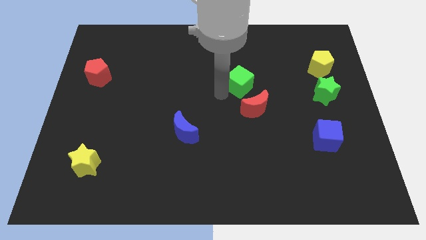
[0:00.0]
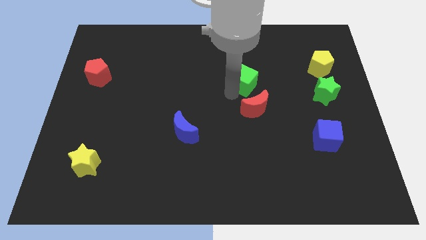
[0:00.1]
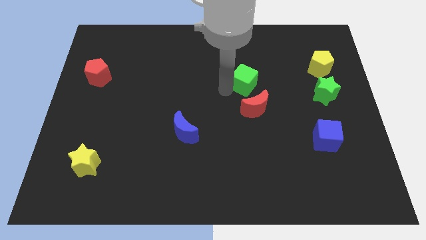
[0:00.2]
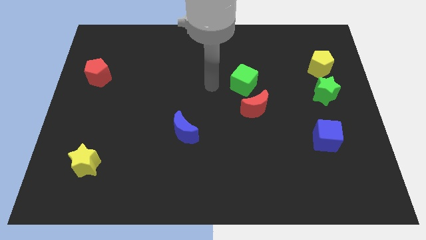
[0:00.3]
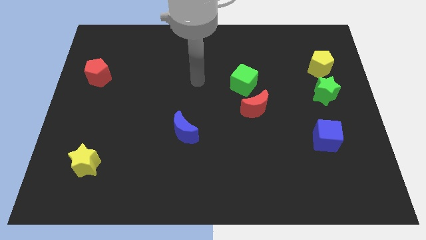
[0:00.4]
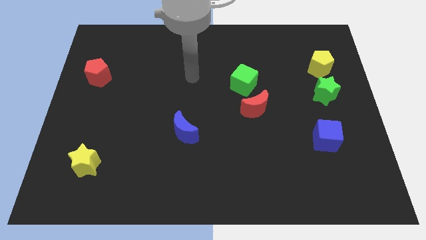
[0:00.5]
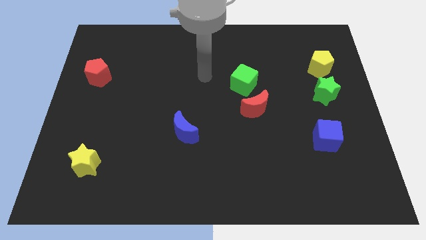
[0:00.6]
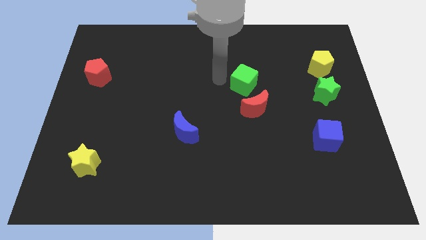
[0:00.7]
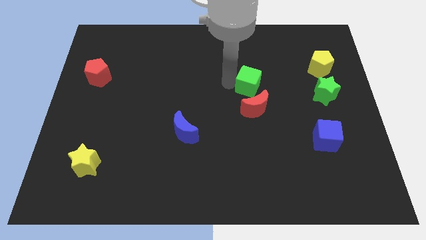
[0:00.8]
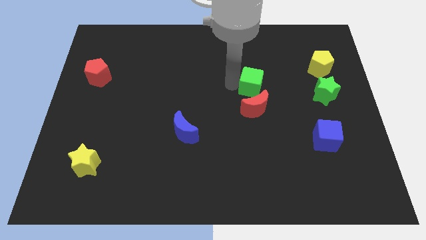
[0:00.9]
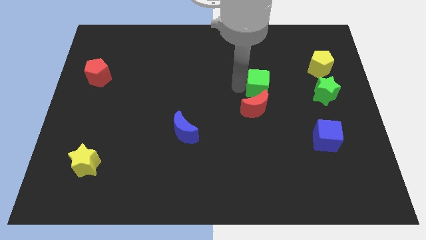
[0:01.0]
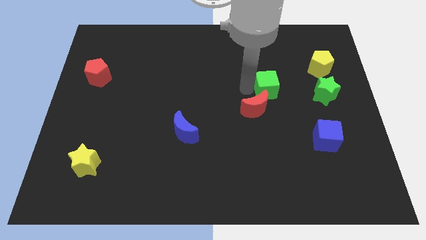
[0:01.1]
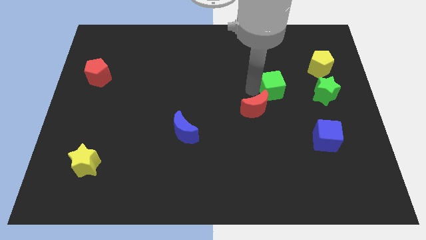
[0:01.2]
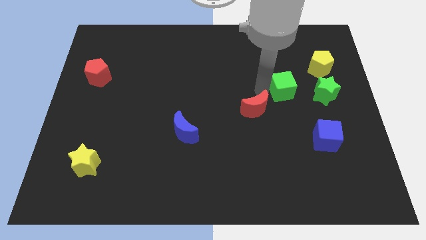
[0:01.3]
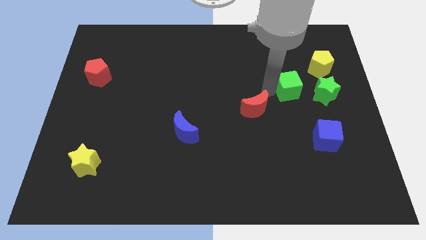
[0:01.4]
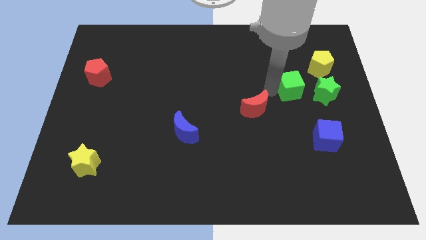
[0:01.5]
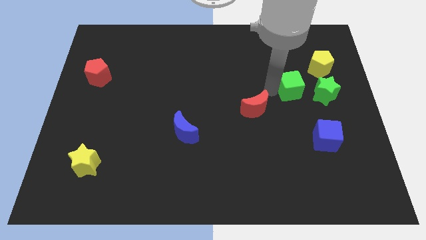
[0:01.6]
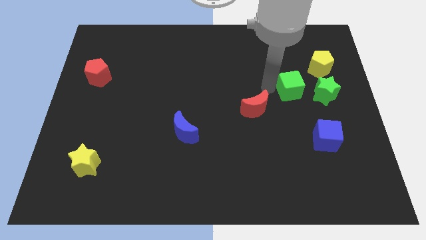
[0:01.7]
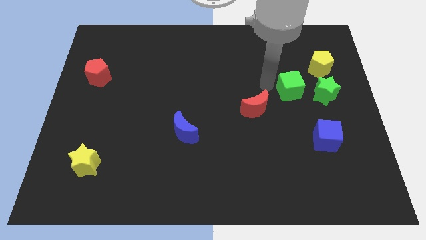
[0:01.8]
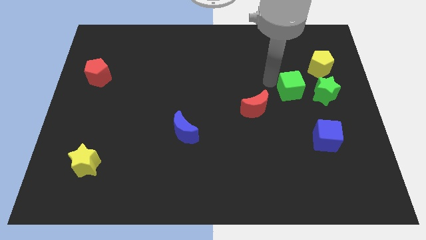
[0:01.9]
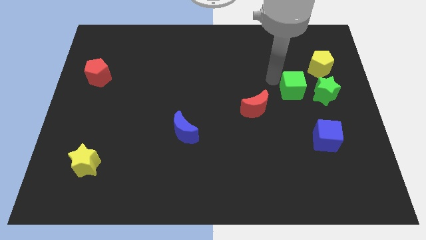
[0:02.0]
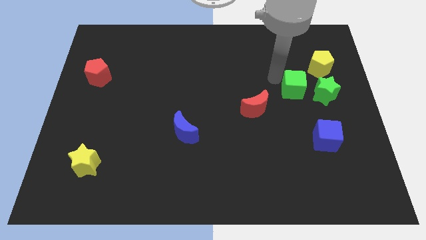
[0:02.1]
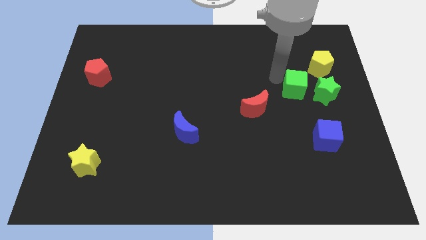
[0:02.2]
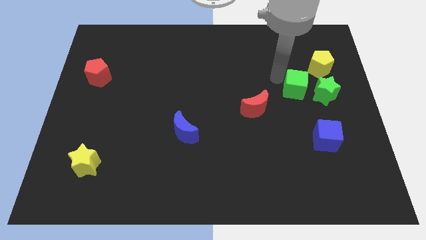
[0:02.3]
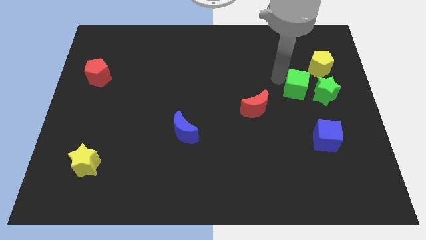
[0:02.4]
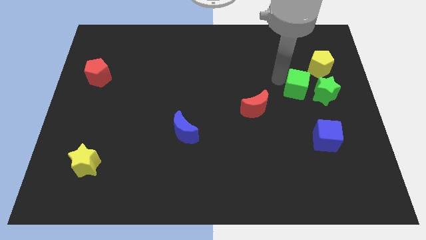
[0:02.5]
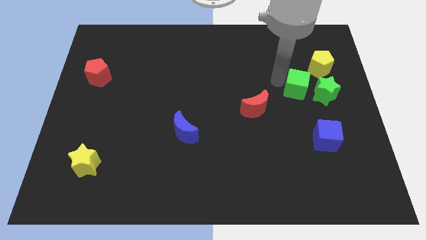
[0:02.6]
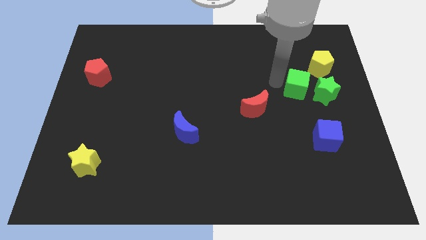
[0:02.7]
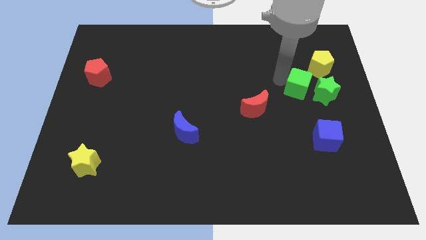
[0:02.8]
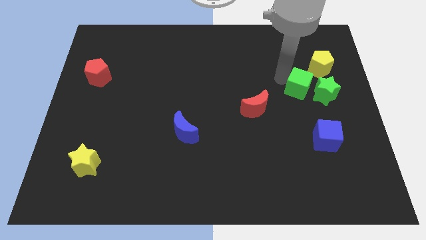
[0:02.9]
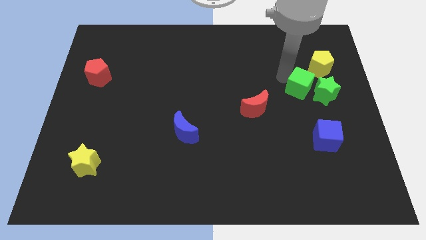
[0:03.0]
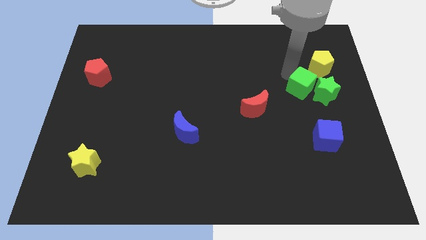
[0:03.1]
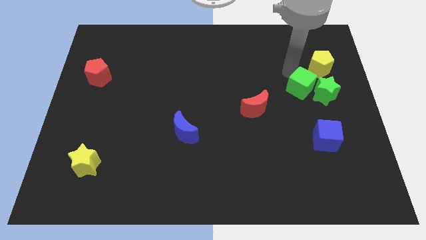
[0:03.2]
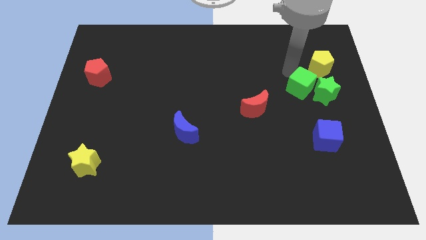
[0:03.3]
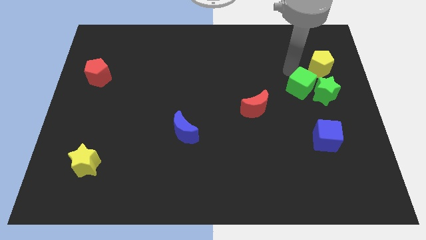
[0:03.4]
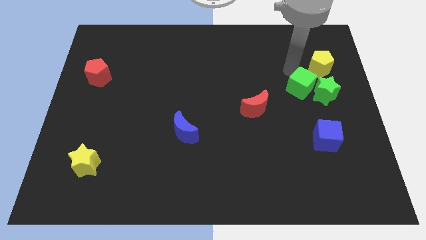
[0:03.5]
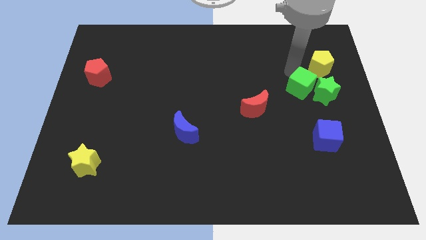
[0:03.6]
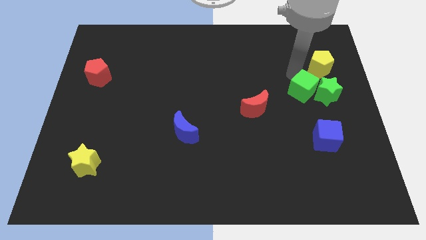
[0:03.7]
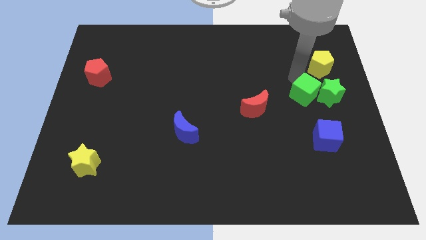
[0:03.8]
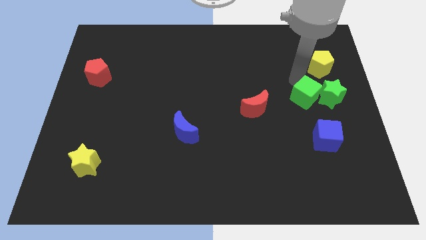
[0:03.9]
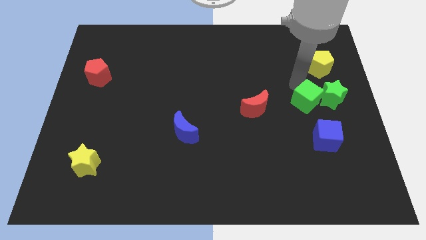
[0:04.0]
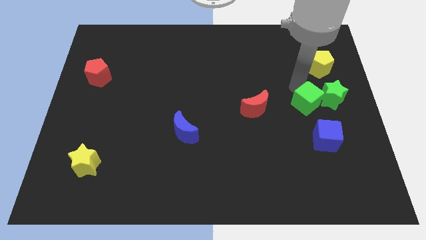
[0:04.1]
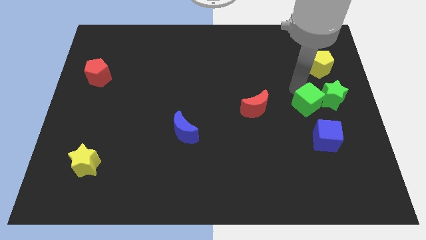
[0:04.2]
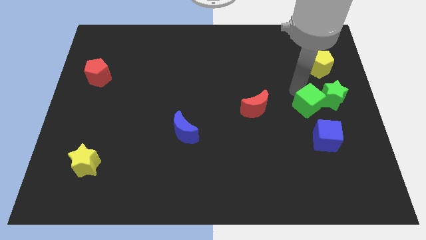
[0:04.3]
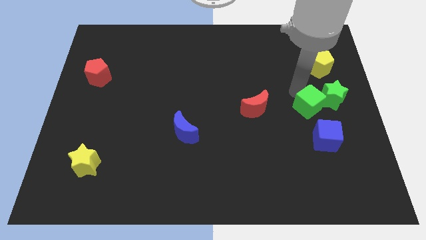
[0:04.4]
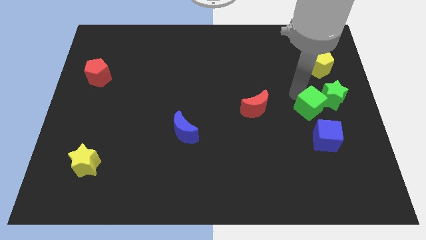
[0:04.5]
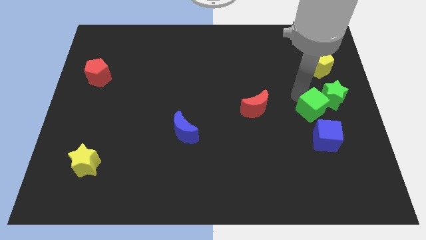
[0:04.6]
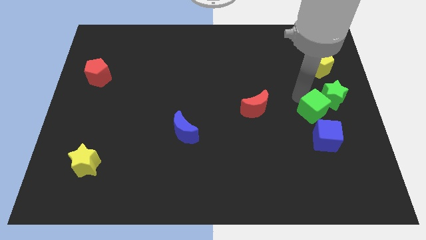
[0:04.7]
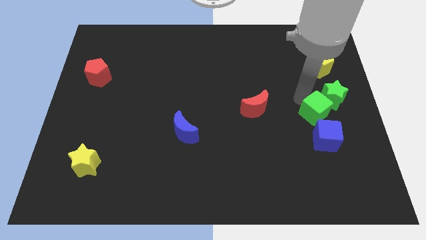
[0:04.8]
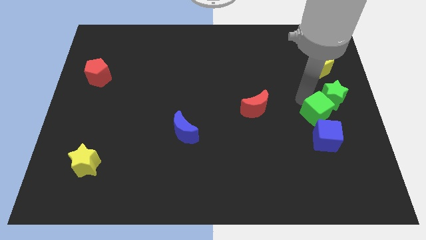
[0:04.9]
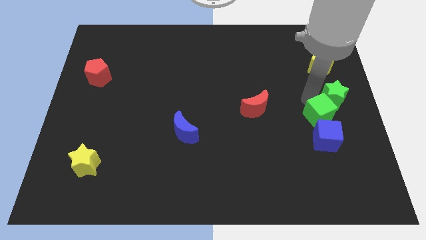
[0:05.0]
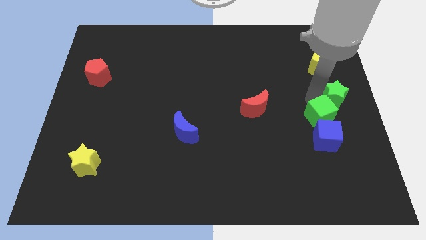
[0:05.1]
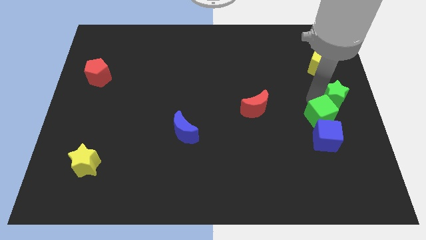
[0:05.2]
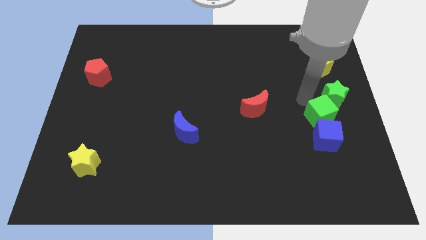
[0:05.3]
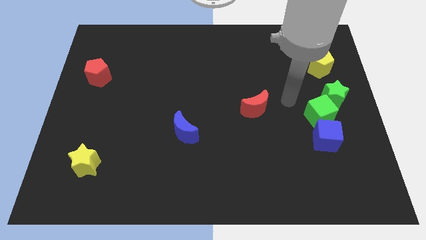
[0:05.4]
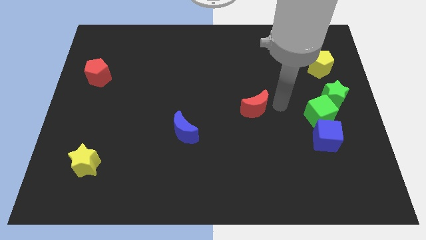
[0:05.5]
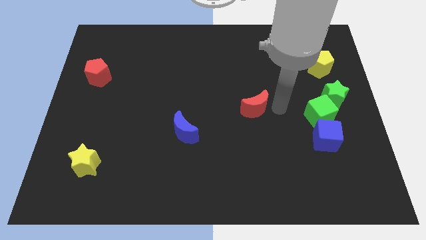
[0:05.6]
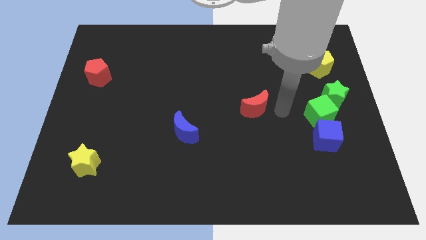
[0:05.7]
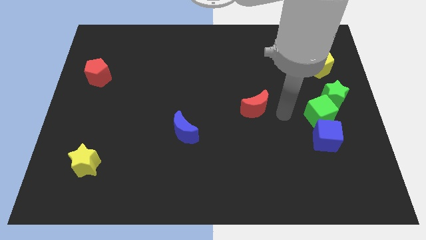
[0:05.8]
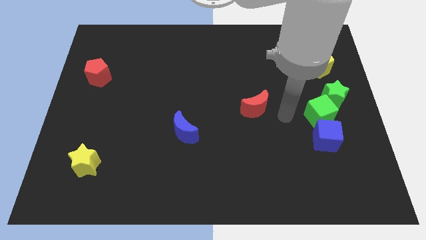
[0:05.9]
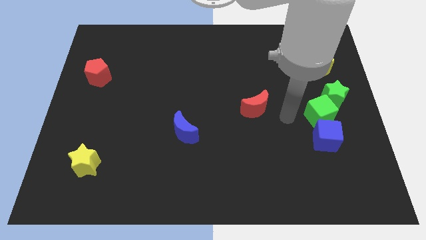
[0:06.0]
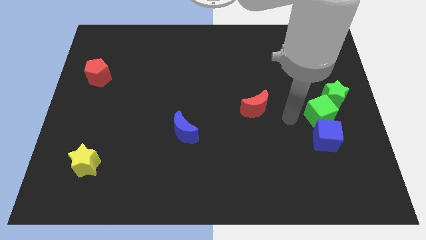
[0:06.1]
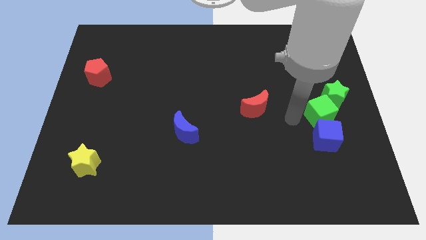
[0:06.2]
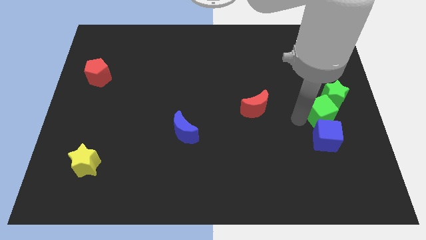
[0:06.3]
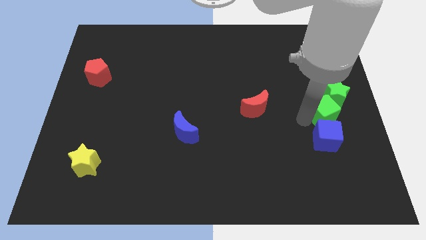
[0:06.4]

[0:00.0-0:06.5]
place the green cube in between the green star and the blue cube

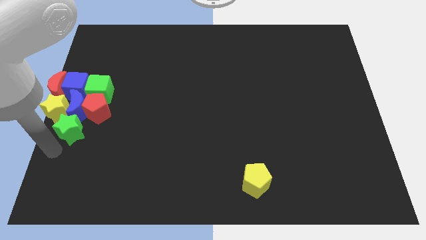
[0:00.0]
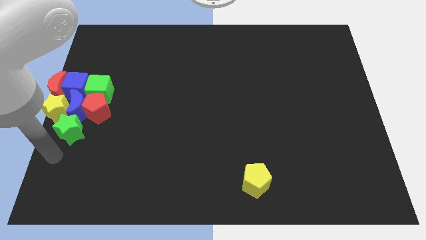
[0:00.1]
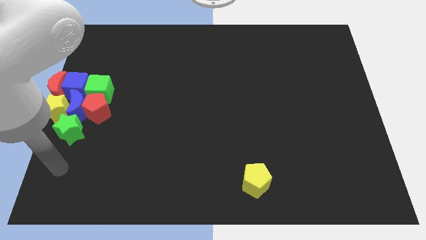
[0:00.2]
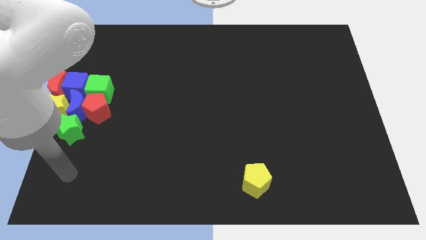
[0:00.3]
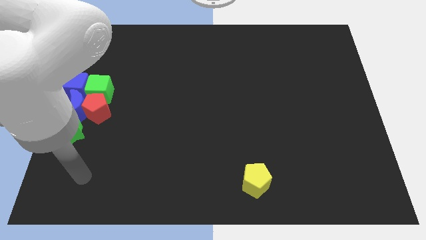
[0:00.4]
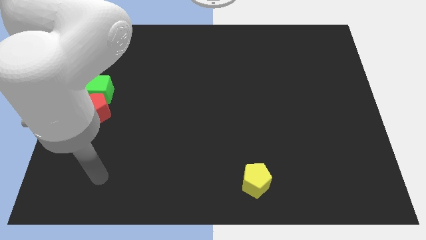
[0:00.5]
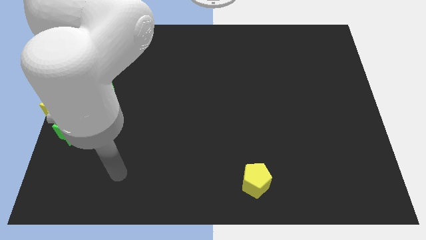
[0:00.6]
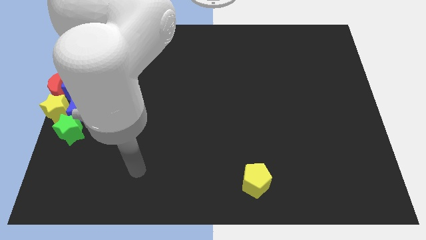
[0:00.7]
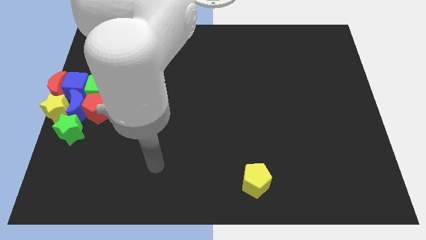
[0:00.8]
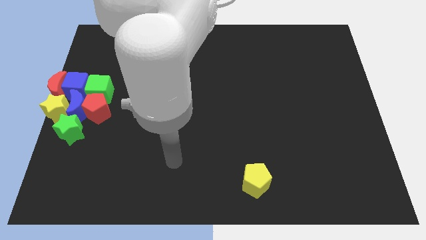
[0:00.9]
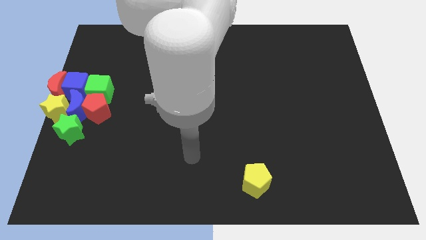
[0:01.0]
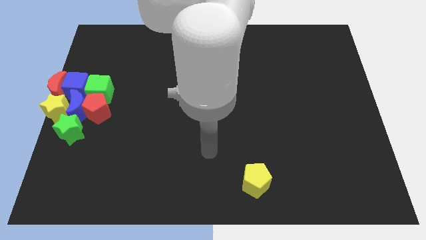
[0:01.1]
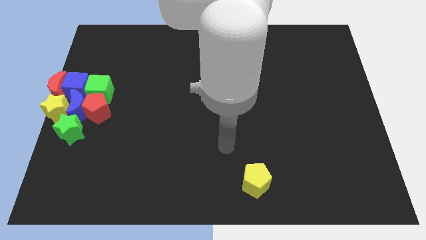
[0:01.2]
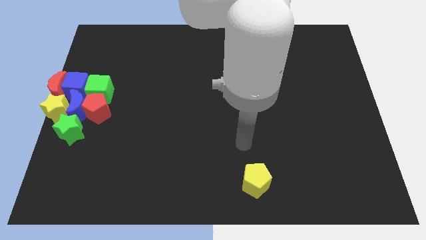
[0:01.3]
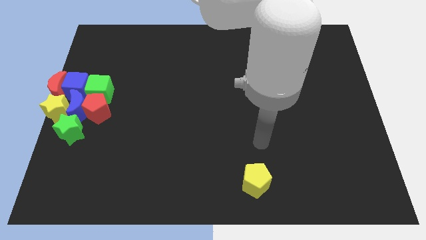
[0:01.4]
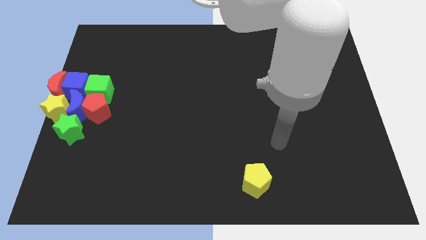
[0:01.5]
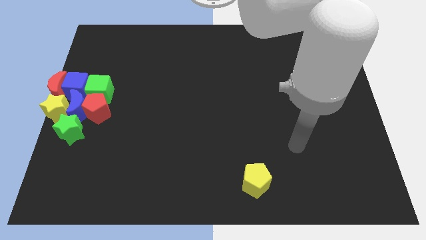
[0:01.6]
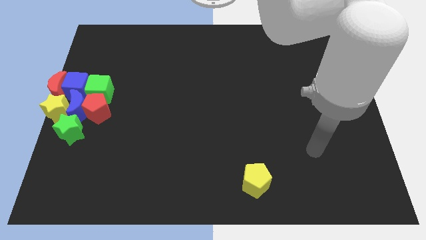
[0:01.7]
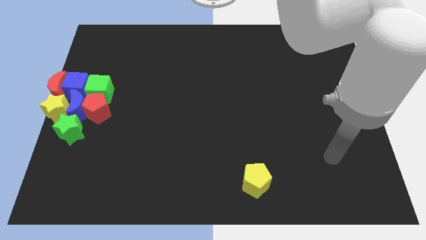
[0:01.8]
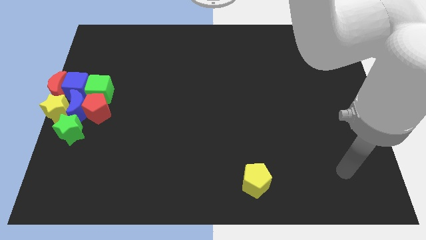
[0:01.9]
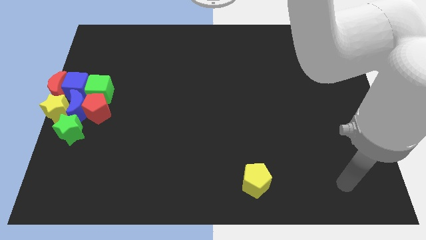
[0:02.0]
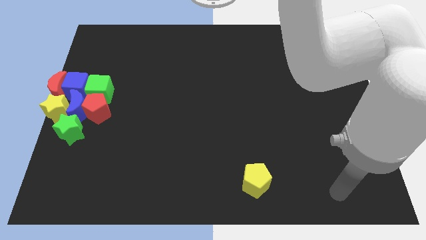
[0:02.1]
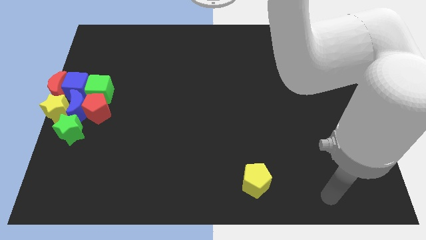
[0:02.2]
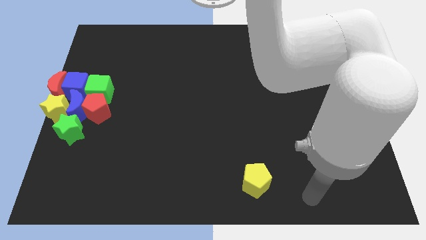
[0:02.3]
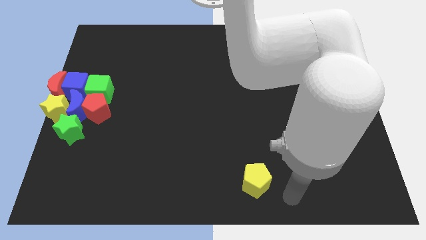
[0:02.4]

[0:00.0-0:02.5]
move your arm away from the green star
